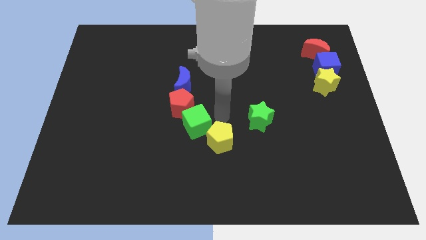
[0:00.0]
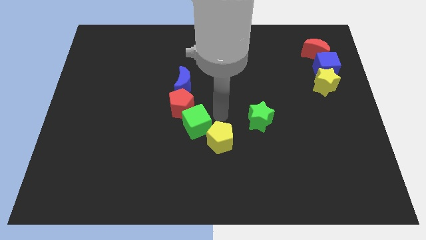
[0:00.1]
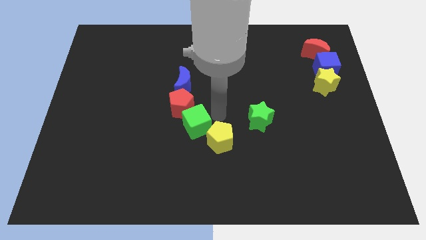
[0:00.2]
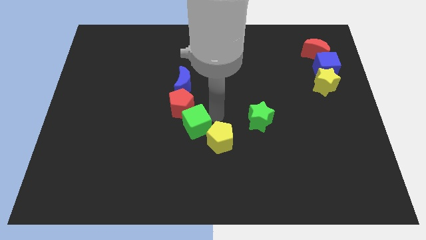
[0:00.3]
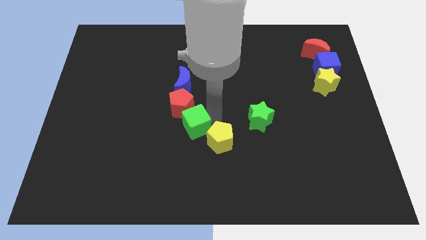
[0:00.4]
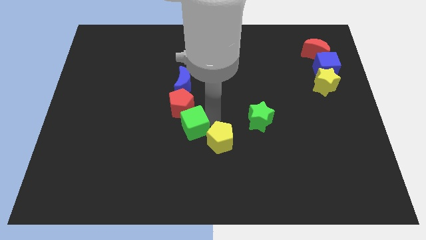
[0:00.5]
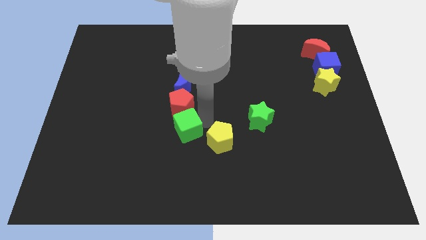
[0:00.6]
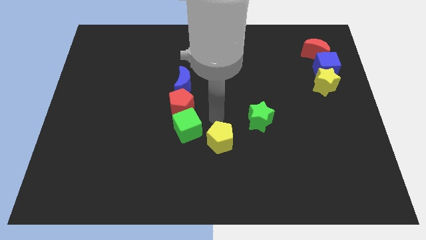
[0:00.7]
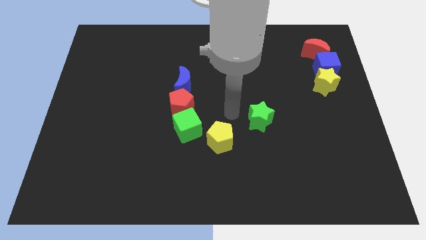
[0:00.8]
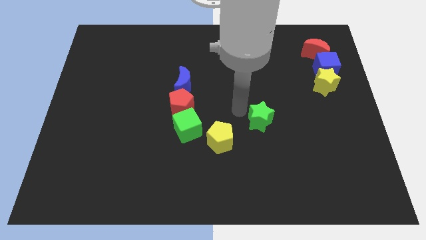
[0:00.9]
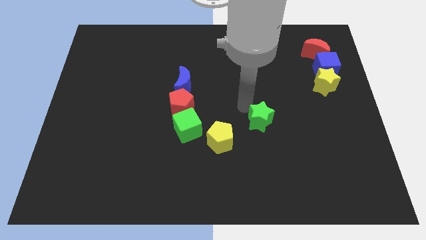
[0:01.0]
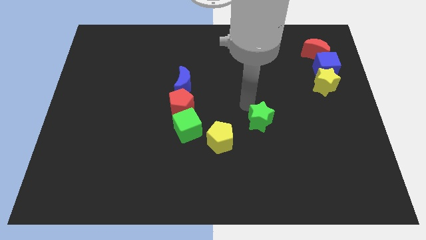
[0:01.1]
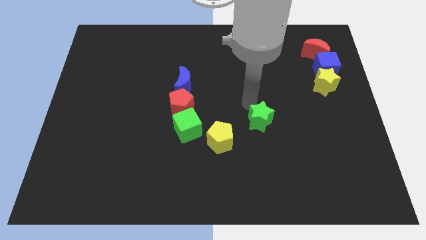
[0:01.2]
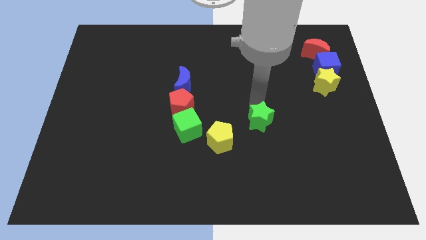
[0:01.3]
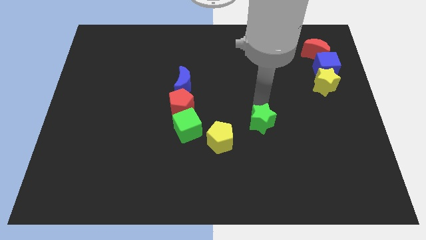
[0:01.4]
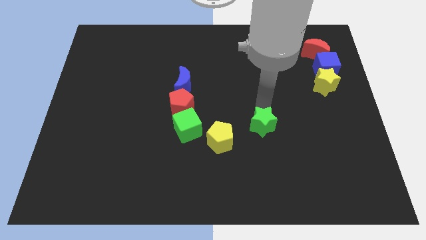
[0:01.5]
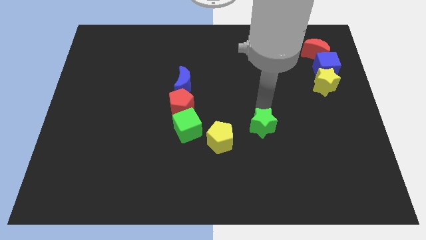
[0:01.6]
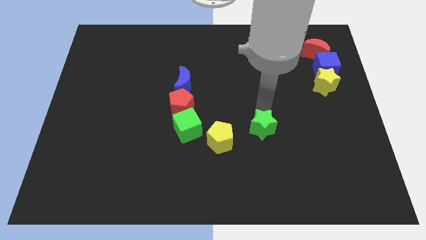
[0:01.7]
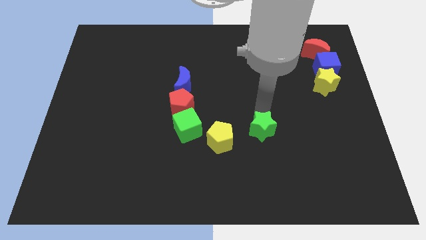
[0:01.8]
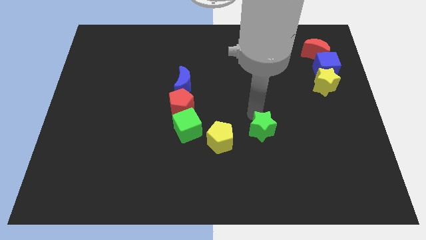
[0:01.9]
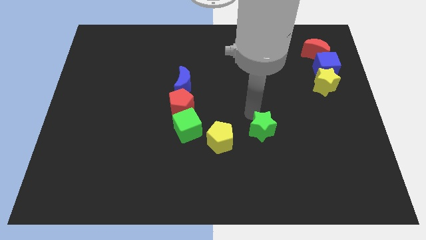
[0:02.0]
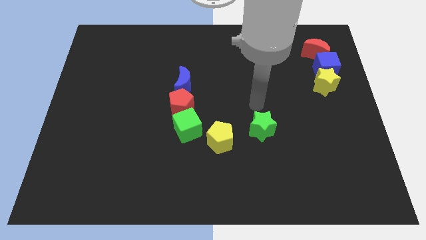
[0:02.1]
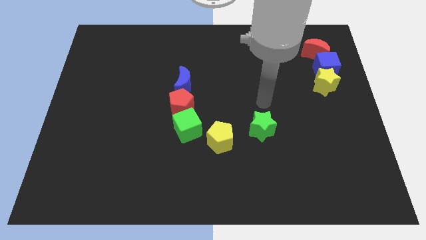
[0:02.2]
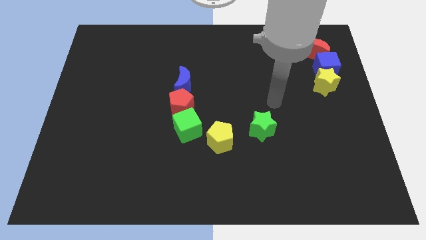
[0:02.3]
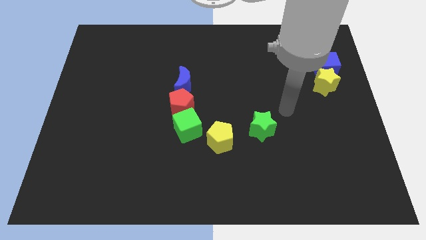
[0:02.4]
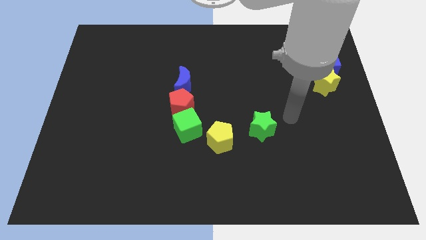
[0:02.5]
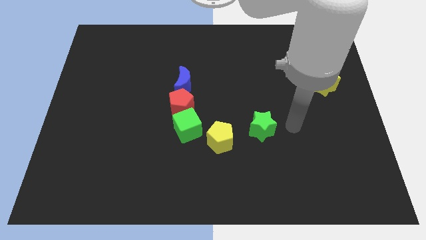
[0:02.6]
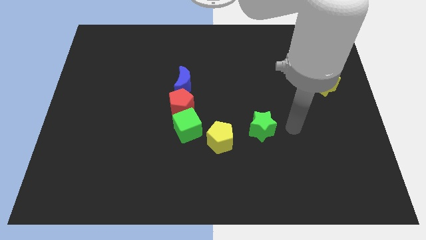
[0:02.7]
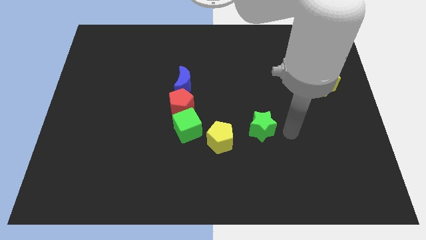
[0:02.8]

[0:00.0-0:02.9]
push green star slightly downwards

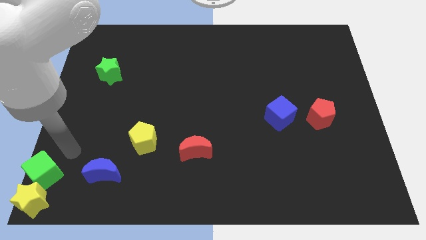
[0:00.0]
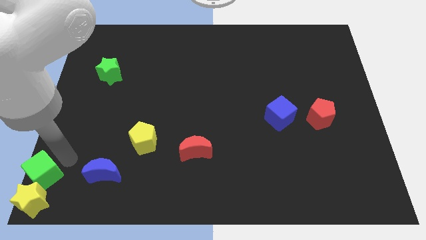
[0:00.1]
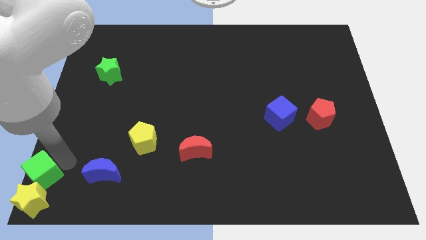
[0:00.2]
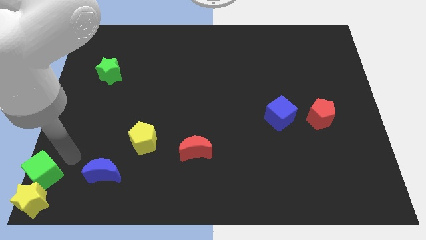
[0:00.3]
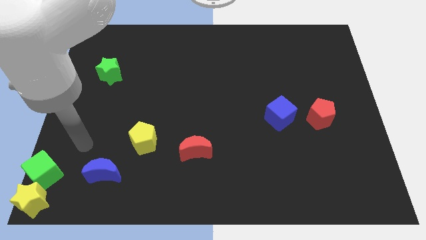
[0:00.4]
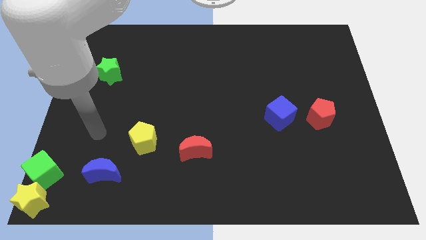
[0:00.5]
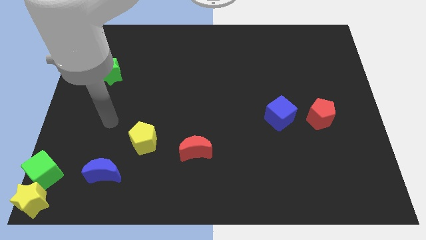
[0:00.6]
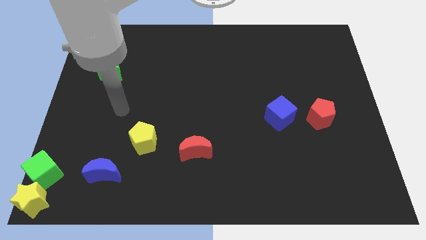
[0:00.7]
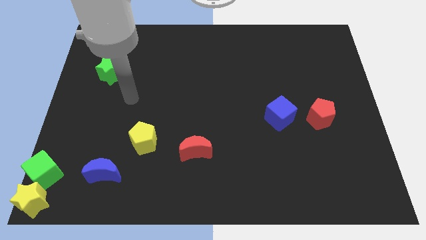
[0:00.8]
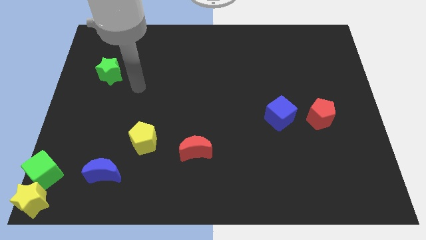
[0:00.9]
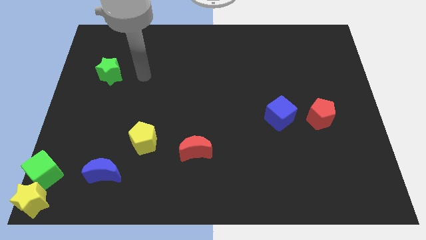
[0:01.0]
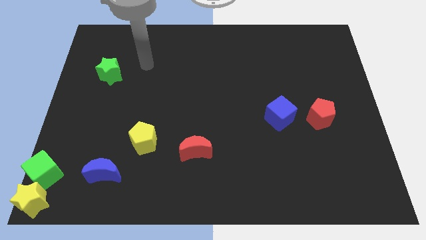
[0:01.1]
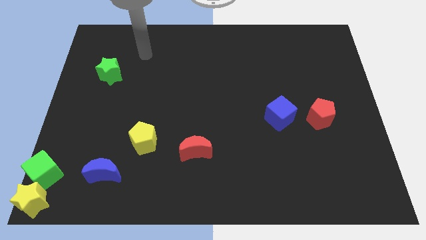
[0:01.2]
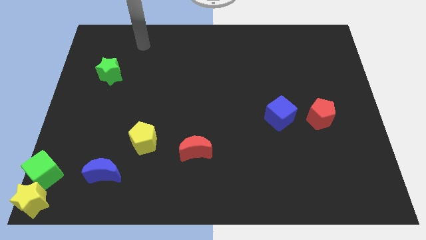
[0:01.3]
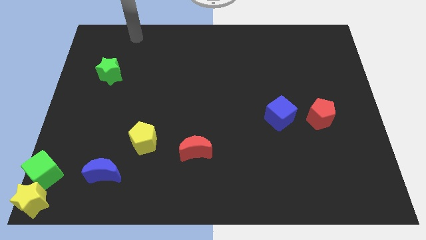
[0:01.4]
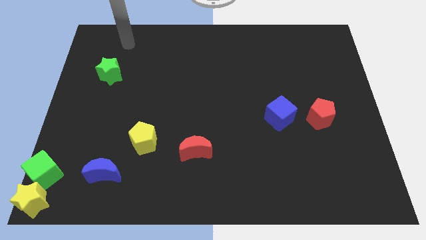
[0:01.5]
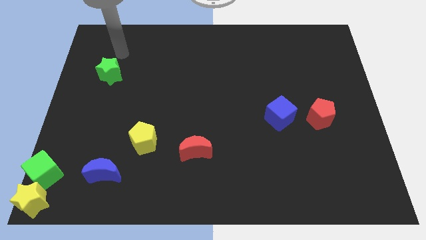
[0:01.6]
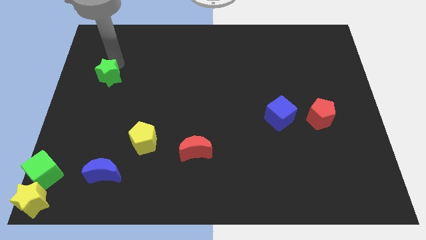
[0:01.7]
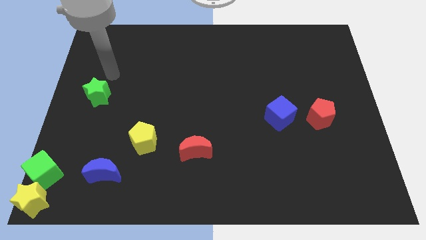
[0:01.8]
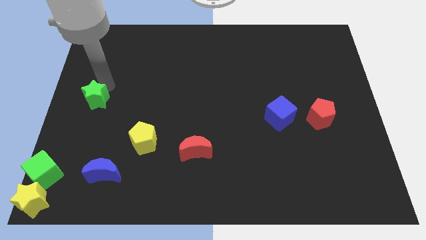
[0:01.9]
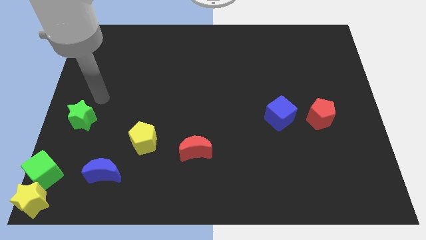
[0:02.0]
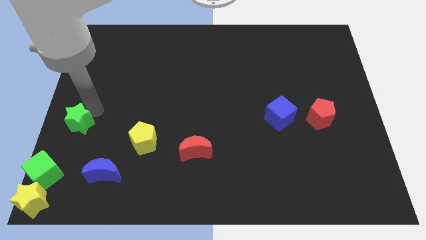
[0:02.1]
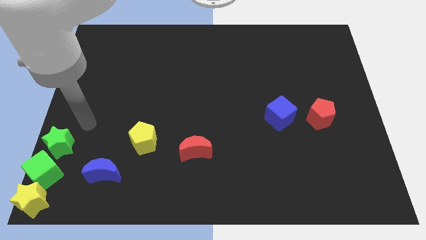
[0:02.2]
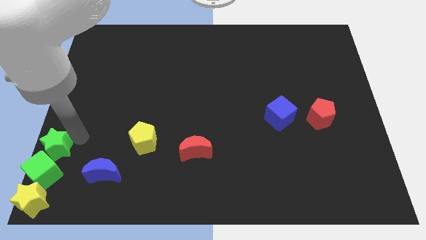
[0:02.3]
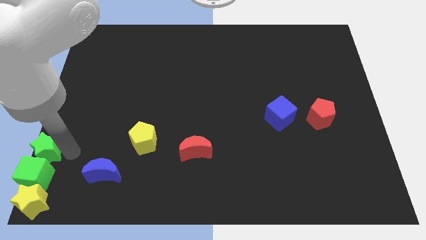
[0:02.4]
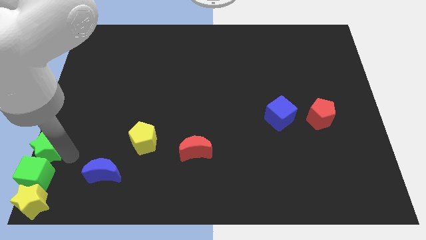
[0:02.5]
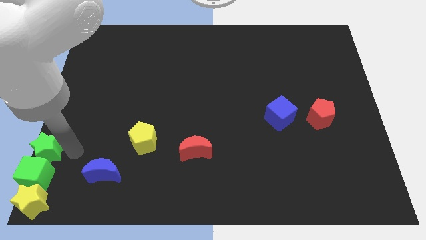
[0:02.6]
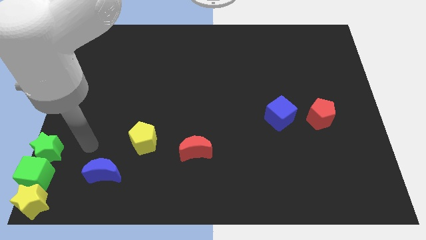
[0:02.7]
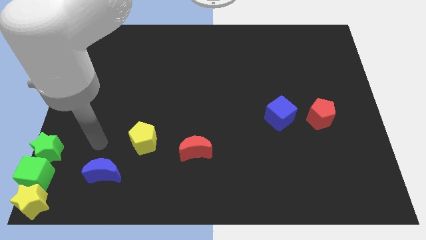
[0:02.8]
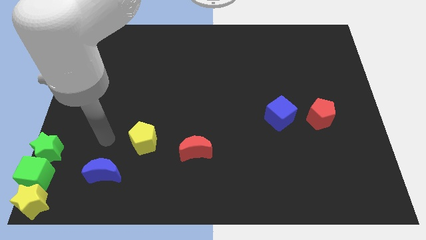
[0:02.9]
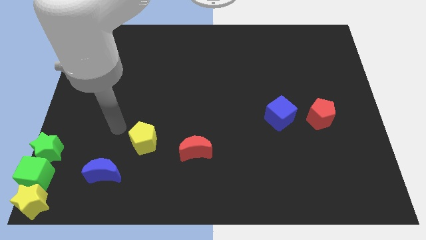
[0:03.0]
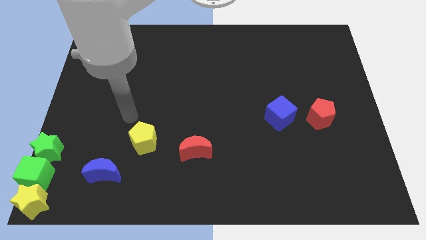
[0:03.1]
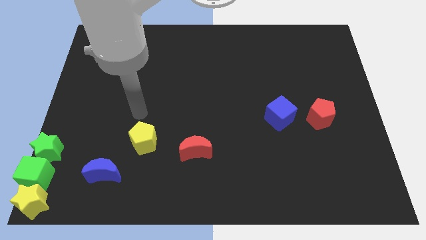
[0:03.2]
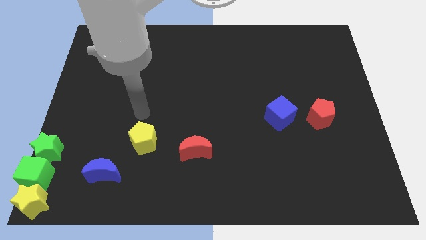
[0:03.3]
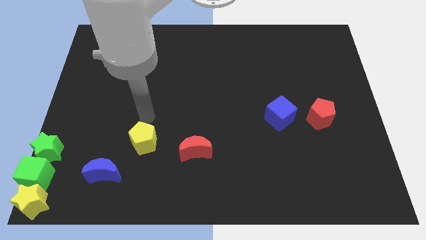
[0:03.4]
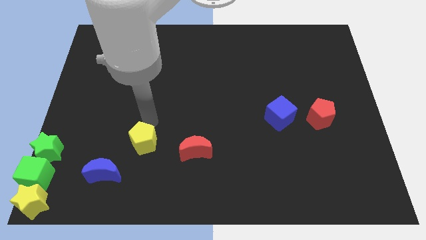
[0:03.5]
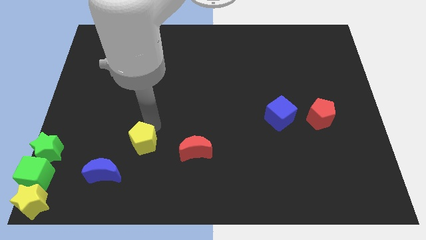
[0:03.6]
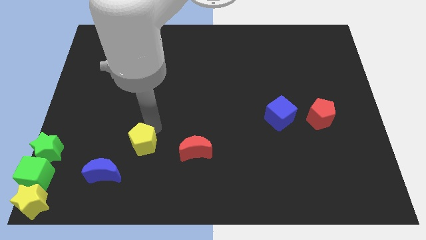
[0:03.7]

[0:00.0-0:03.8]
move the green star into the green cube

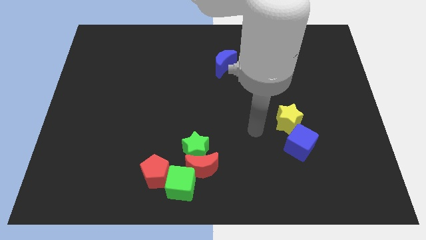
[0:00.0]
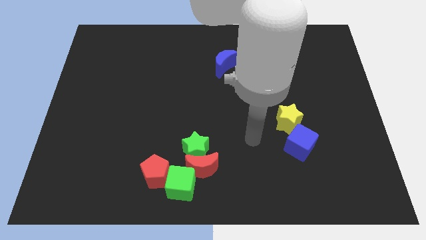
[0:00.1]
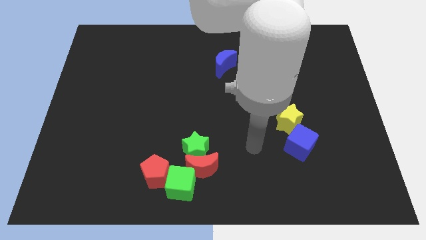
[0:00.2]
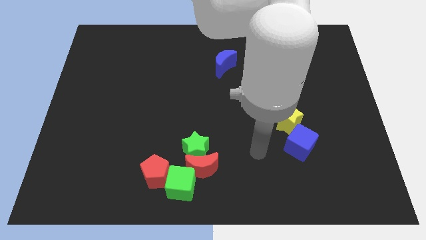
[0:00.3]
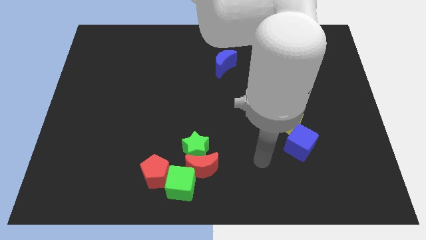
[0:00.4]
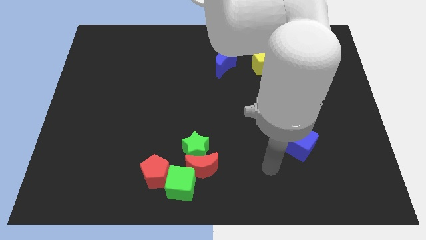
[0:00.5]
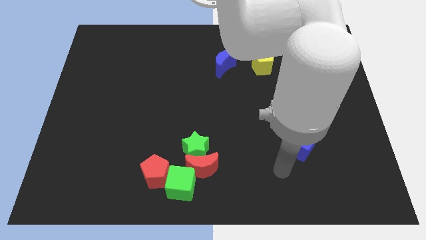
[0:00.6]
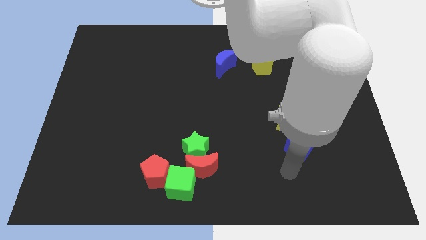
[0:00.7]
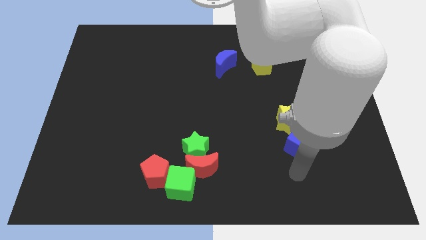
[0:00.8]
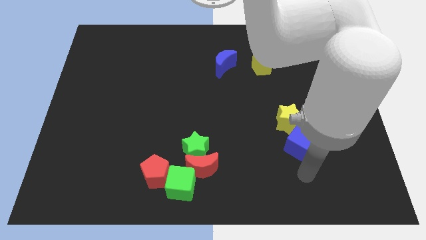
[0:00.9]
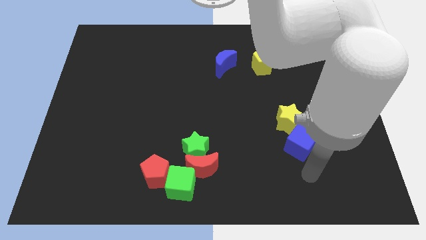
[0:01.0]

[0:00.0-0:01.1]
move your arm at the bottom of the blue cube

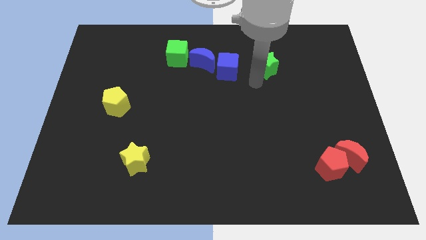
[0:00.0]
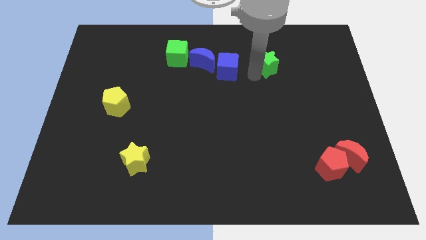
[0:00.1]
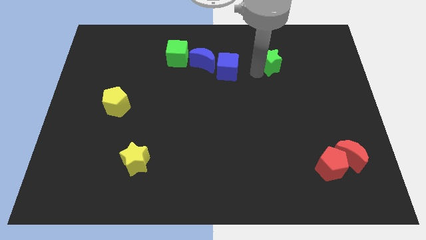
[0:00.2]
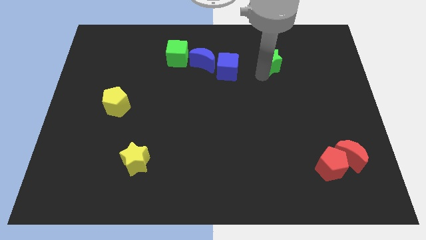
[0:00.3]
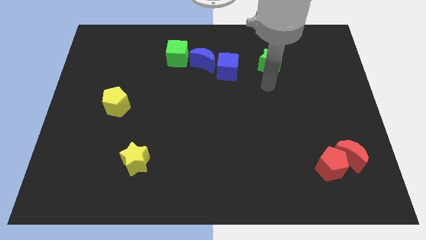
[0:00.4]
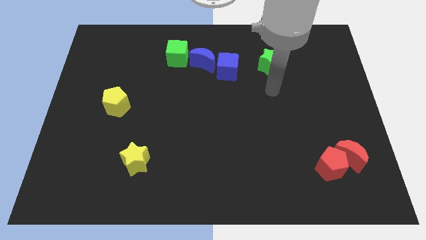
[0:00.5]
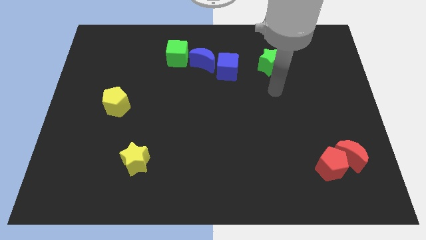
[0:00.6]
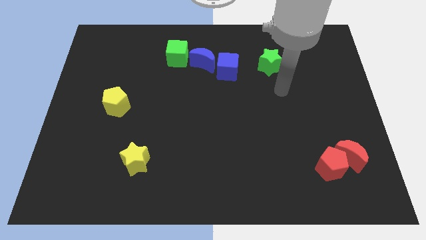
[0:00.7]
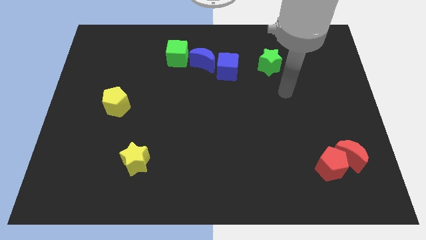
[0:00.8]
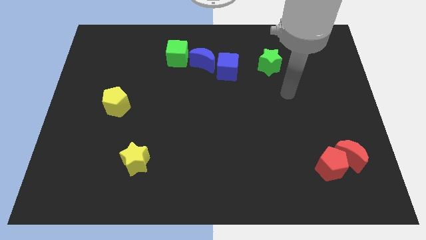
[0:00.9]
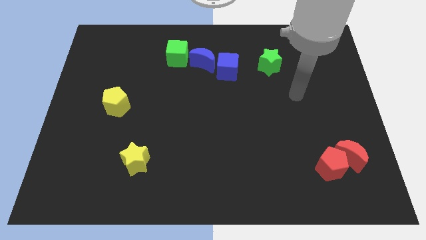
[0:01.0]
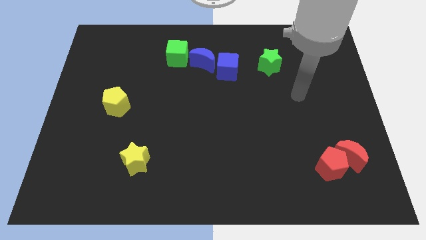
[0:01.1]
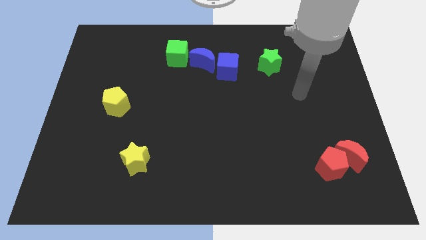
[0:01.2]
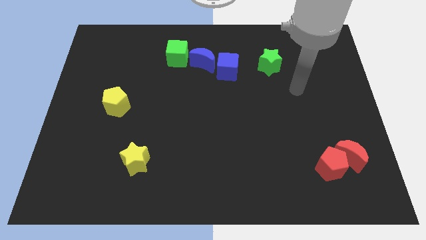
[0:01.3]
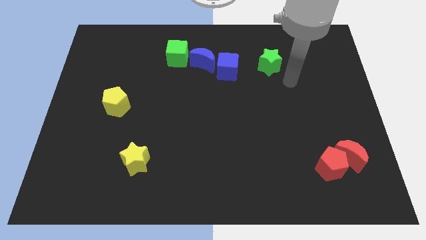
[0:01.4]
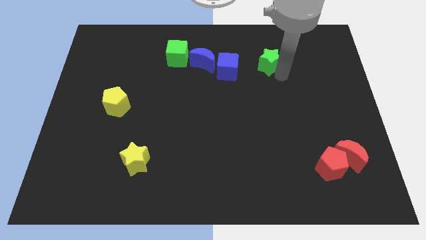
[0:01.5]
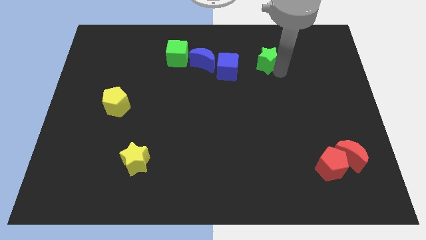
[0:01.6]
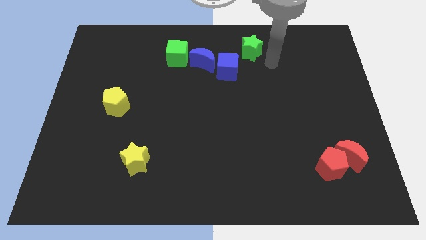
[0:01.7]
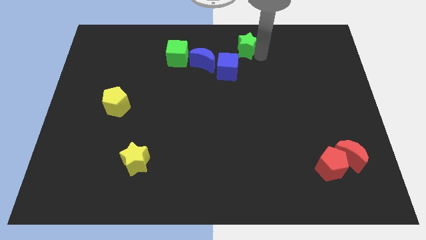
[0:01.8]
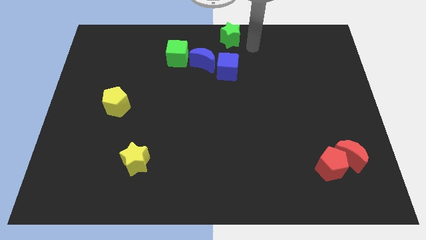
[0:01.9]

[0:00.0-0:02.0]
move green star to the top center
